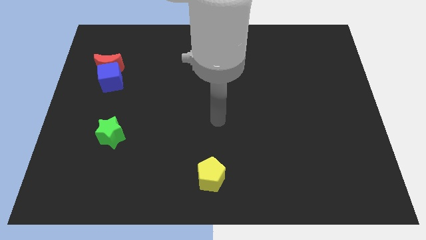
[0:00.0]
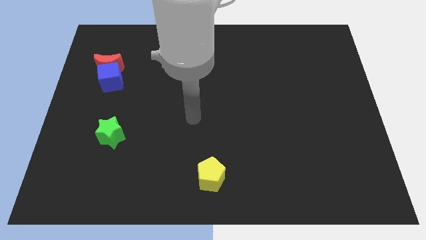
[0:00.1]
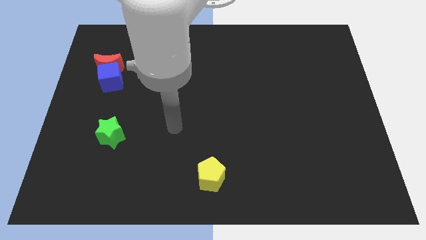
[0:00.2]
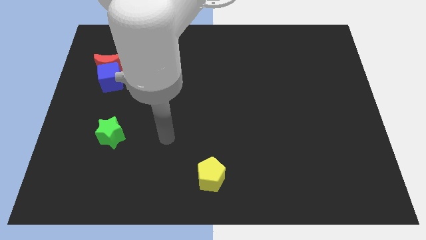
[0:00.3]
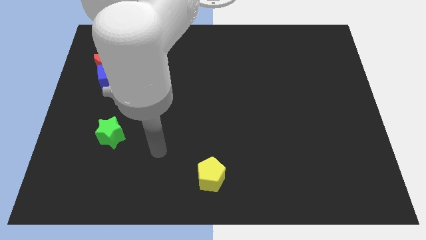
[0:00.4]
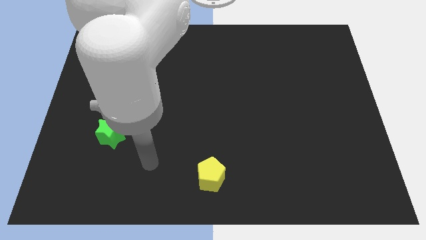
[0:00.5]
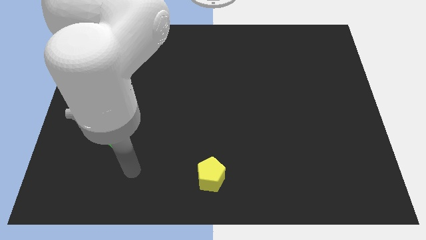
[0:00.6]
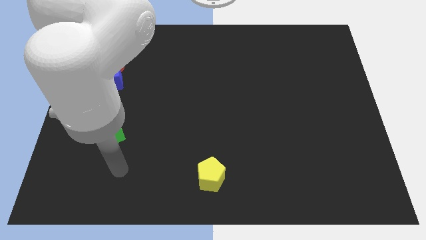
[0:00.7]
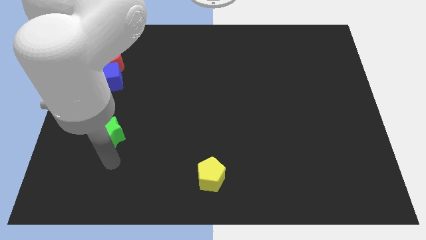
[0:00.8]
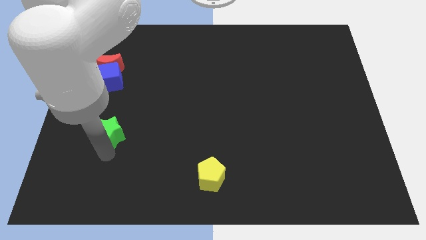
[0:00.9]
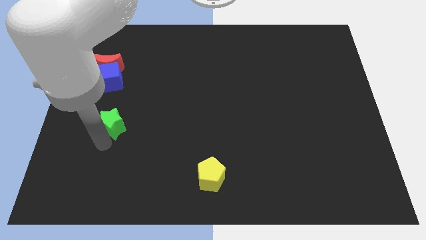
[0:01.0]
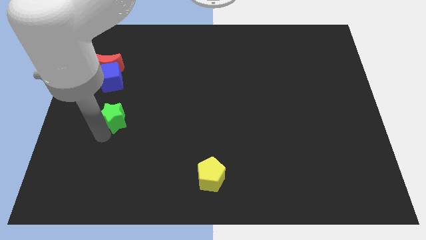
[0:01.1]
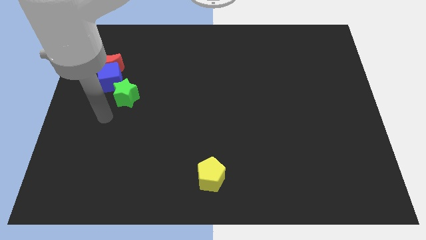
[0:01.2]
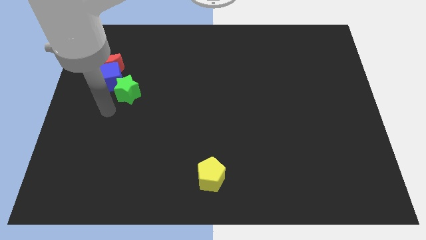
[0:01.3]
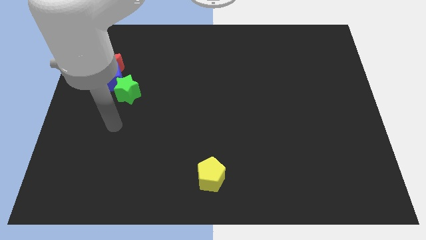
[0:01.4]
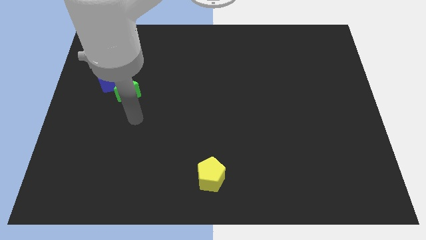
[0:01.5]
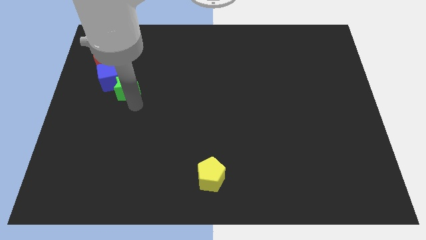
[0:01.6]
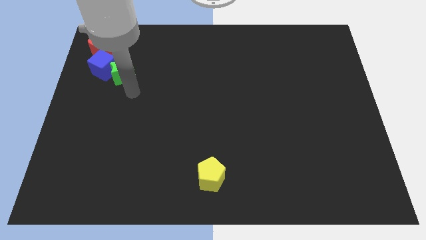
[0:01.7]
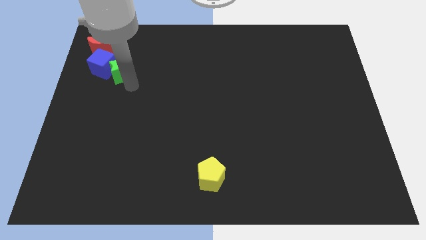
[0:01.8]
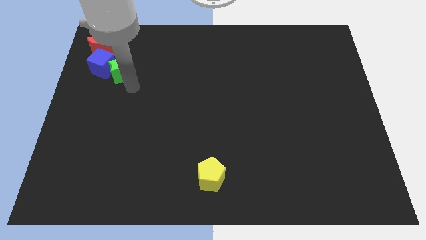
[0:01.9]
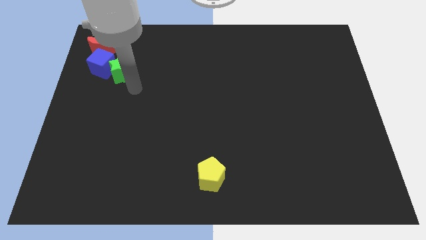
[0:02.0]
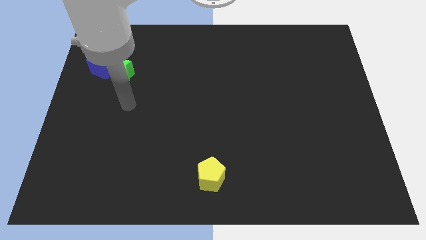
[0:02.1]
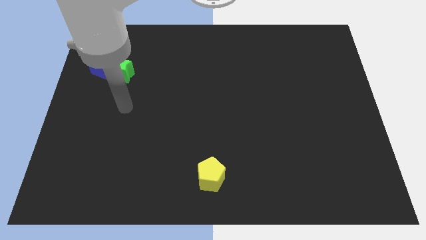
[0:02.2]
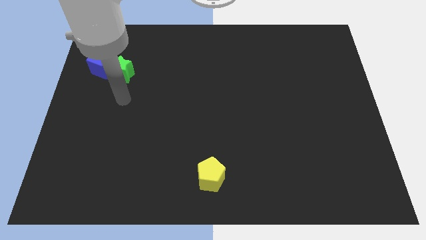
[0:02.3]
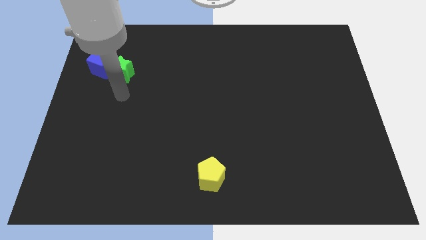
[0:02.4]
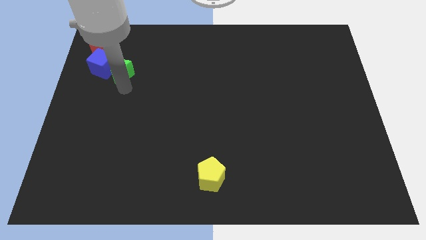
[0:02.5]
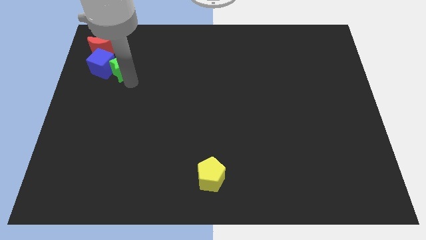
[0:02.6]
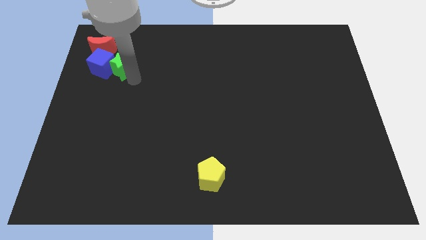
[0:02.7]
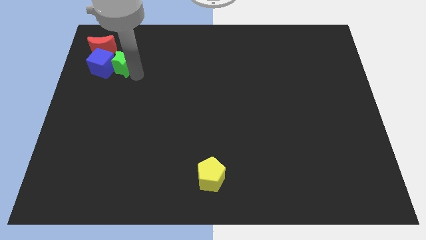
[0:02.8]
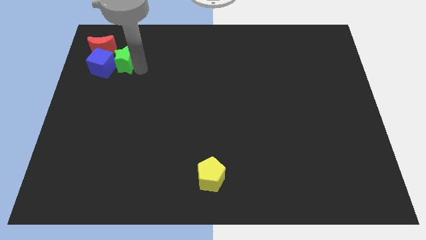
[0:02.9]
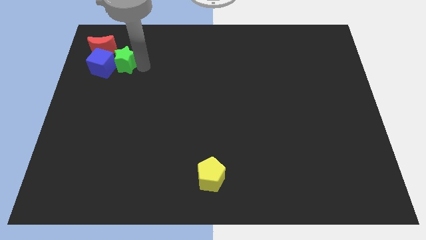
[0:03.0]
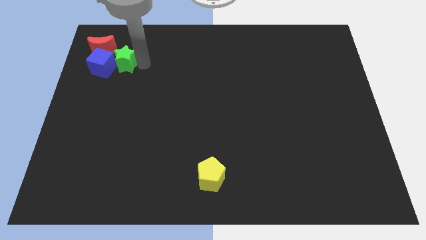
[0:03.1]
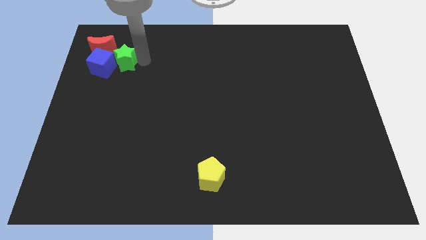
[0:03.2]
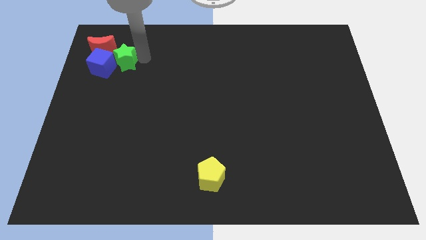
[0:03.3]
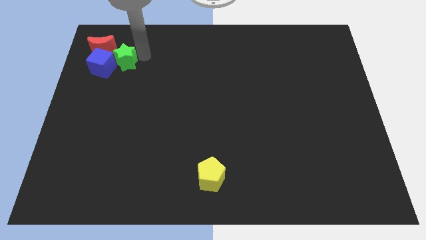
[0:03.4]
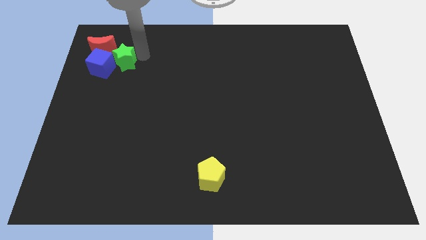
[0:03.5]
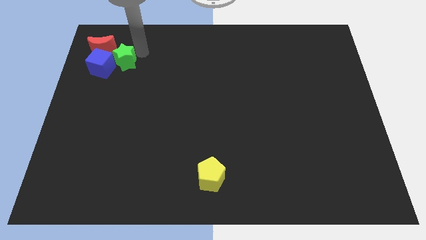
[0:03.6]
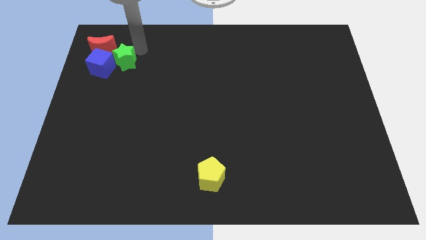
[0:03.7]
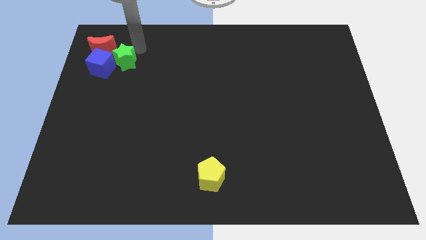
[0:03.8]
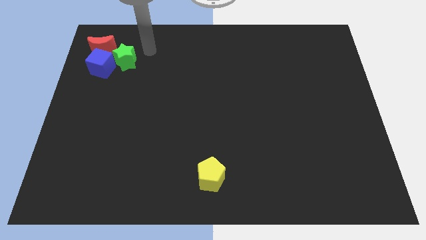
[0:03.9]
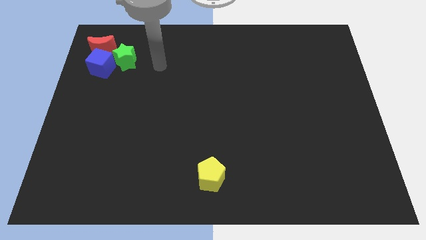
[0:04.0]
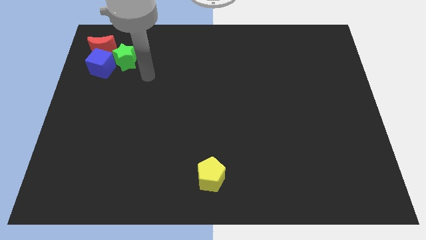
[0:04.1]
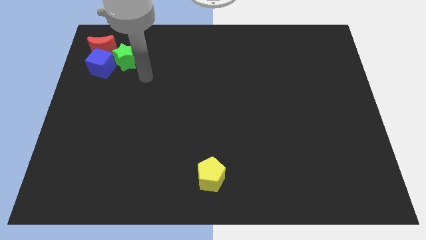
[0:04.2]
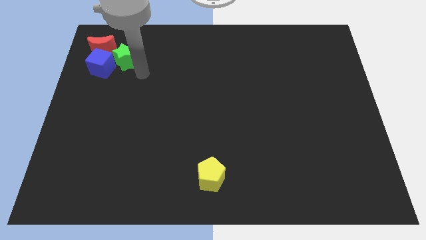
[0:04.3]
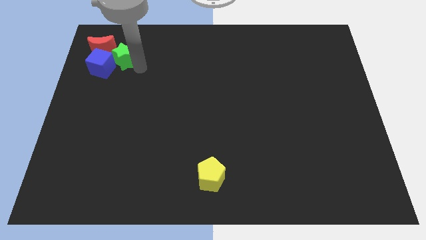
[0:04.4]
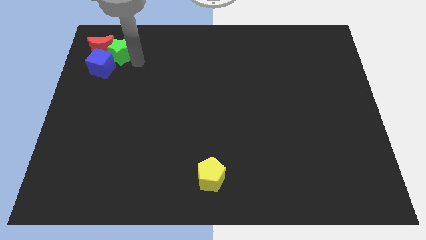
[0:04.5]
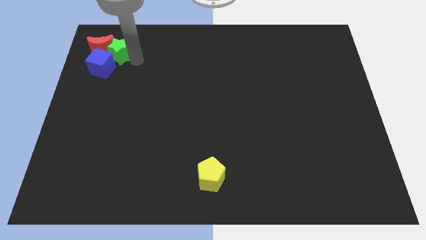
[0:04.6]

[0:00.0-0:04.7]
move the star next to the moon

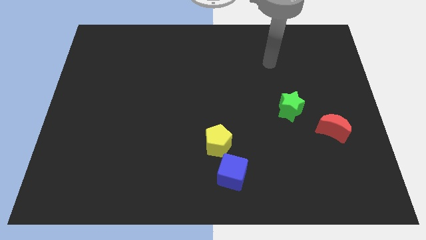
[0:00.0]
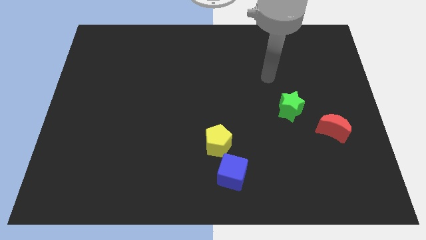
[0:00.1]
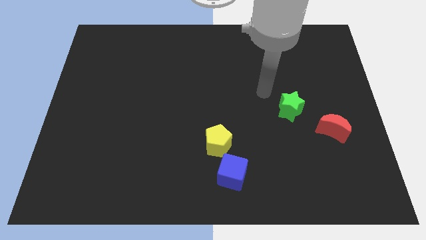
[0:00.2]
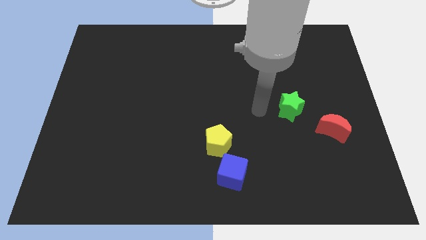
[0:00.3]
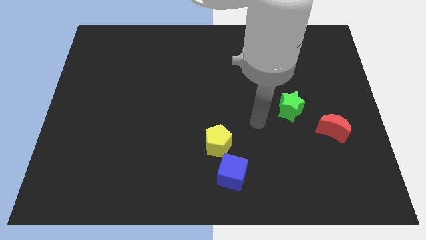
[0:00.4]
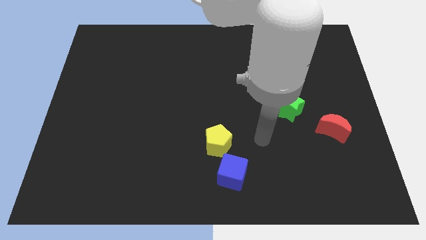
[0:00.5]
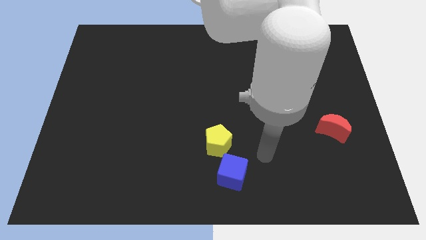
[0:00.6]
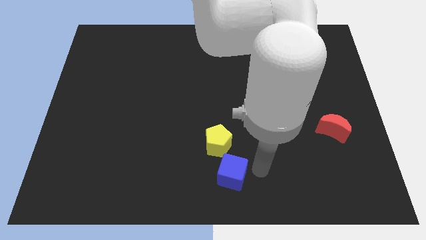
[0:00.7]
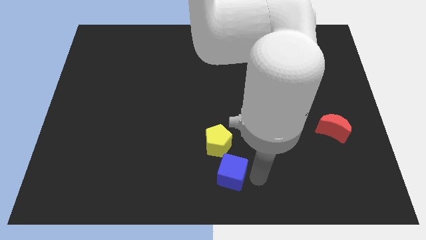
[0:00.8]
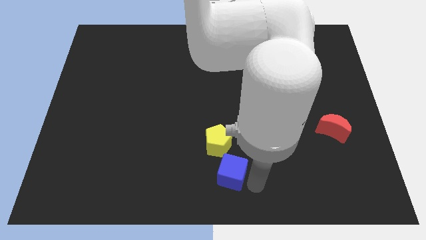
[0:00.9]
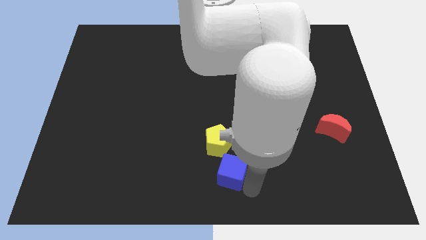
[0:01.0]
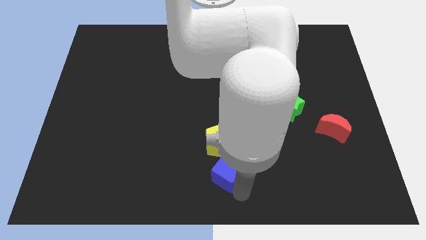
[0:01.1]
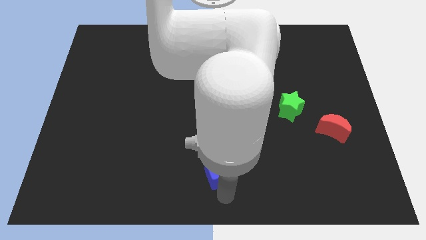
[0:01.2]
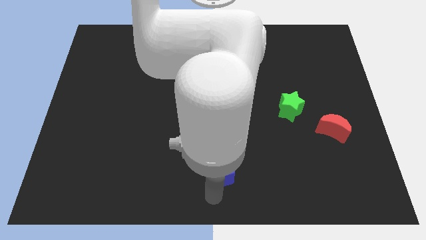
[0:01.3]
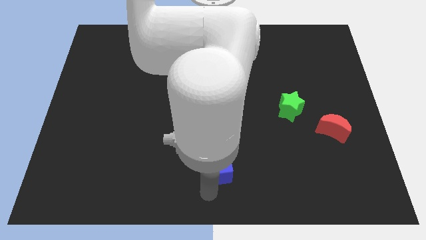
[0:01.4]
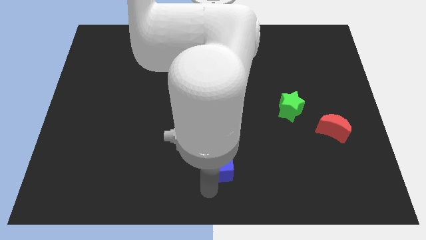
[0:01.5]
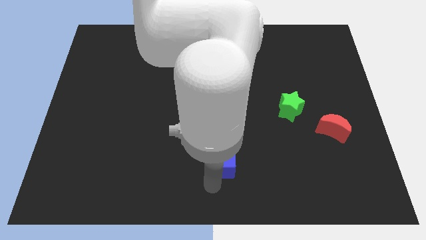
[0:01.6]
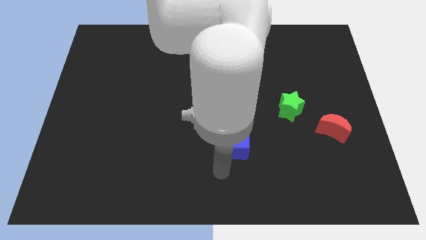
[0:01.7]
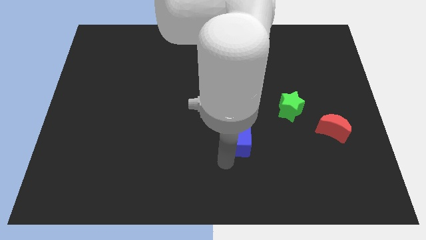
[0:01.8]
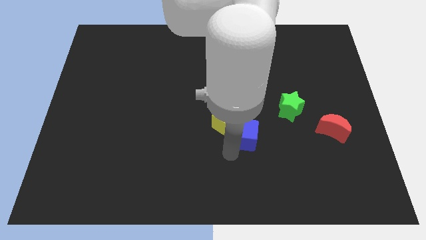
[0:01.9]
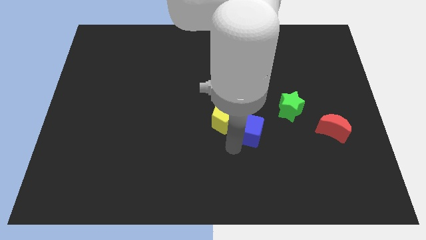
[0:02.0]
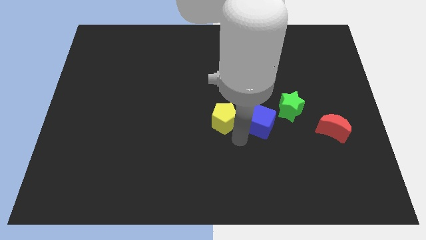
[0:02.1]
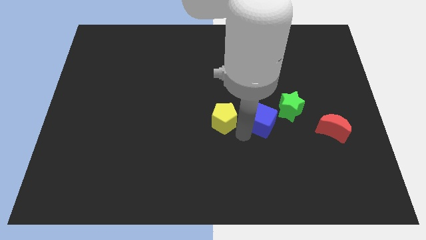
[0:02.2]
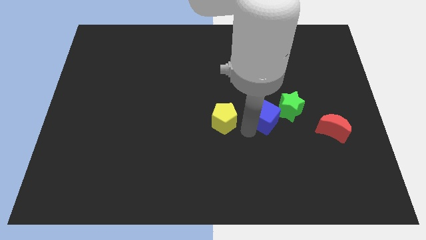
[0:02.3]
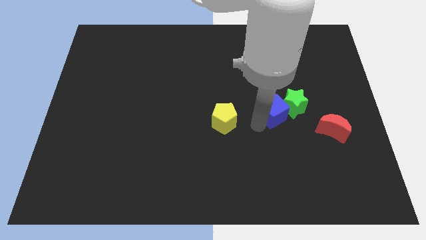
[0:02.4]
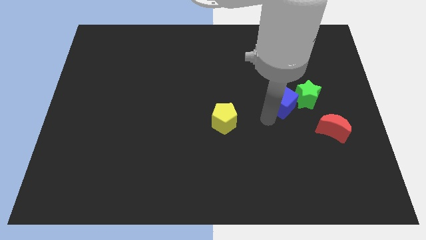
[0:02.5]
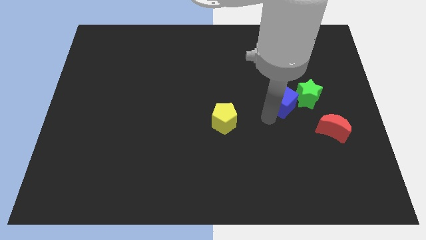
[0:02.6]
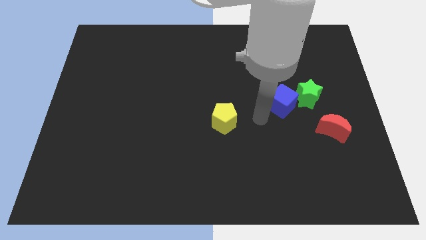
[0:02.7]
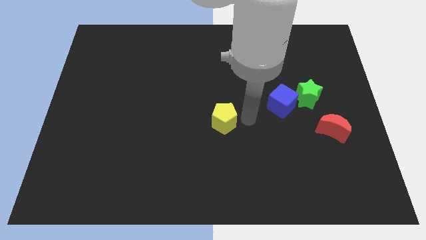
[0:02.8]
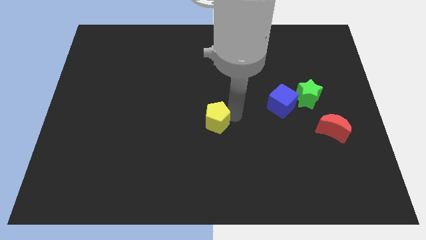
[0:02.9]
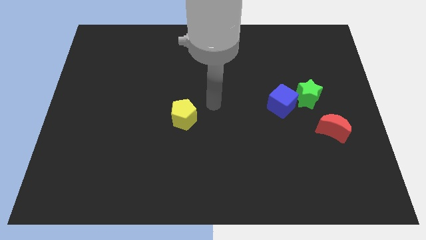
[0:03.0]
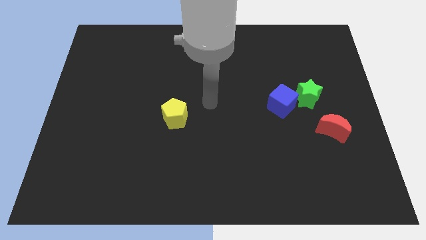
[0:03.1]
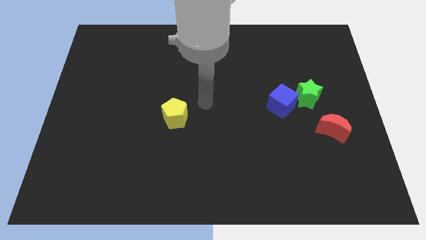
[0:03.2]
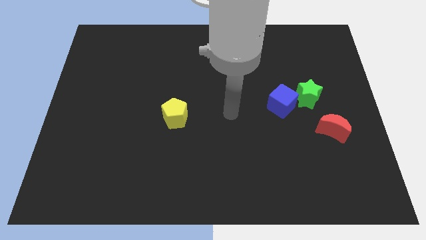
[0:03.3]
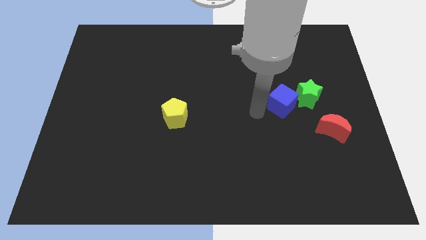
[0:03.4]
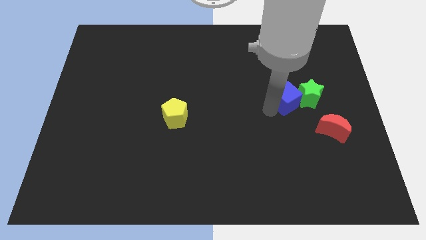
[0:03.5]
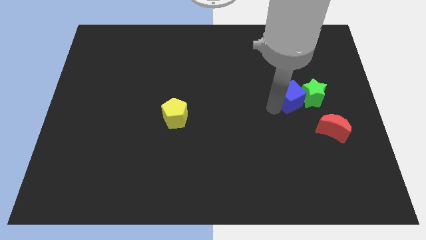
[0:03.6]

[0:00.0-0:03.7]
move the blue block close to the green star

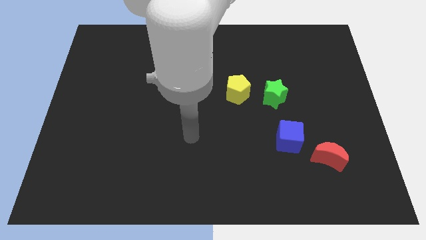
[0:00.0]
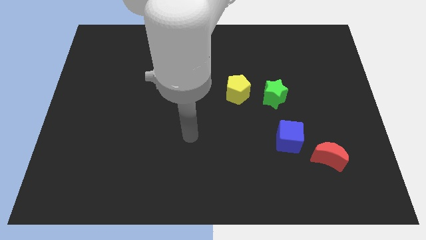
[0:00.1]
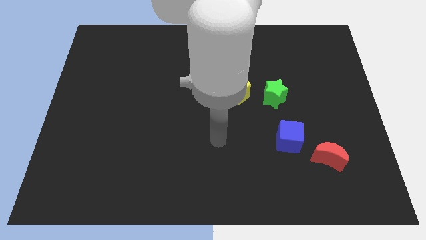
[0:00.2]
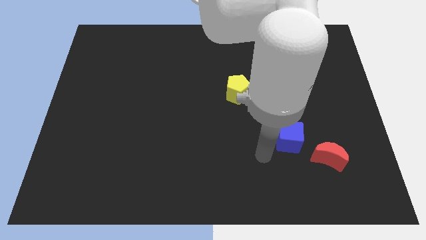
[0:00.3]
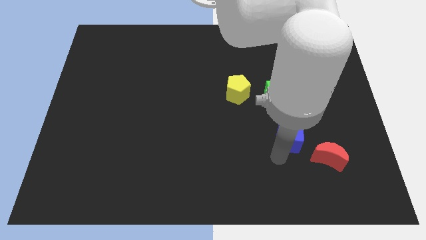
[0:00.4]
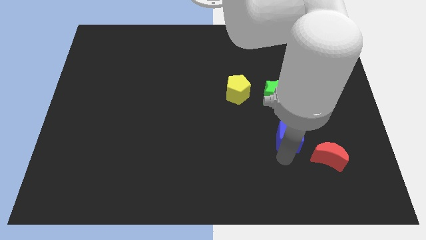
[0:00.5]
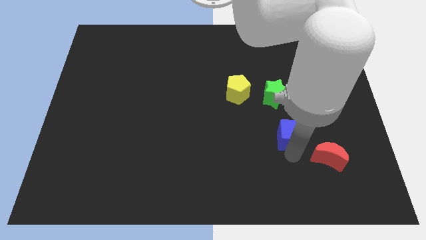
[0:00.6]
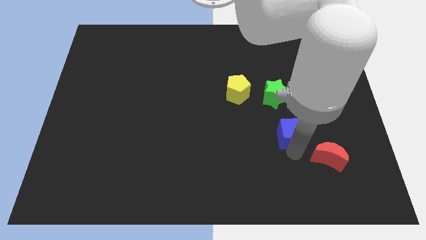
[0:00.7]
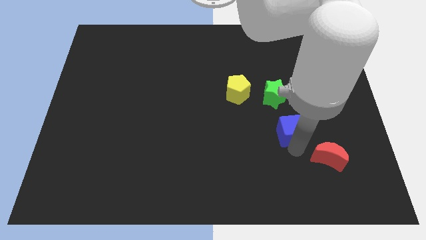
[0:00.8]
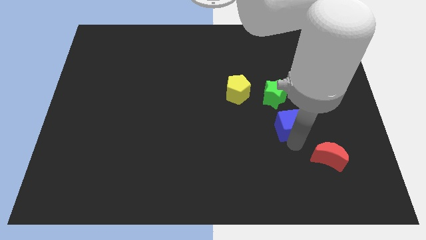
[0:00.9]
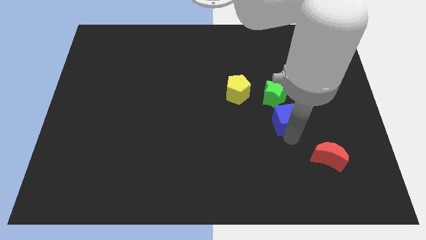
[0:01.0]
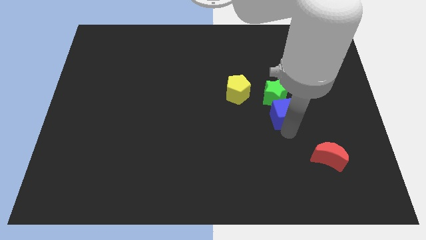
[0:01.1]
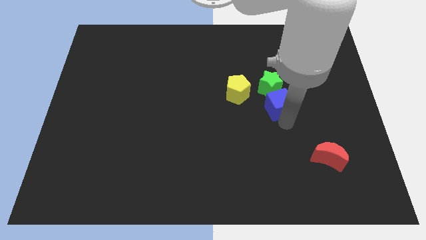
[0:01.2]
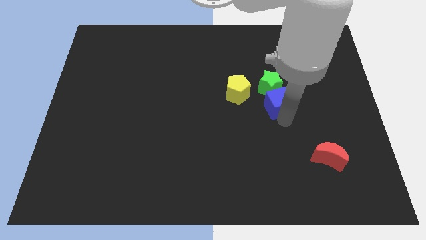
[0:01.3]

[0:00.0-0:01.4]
push the cube to the star
